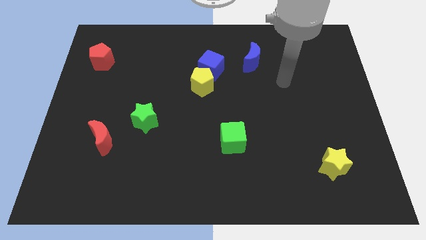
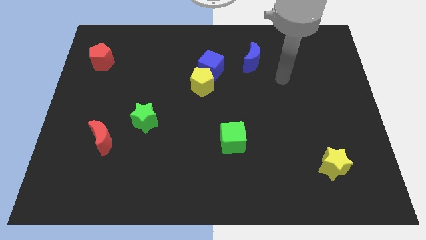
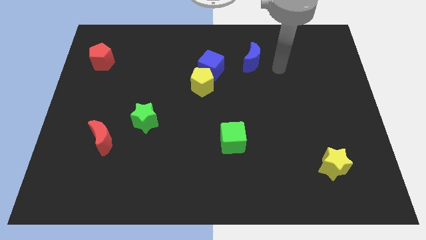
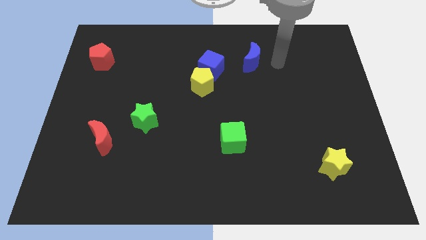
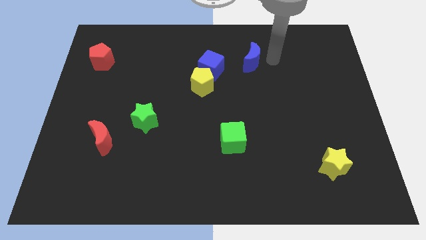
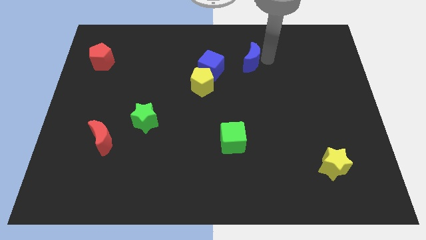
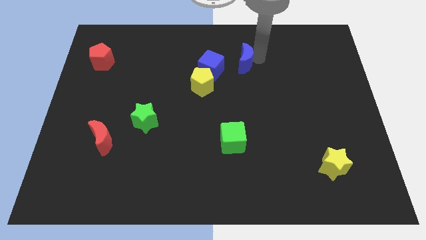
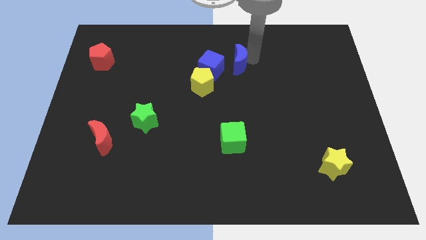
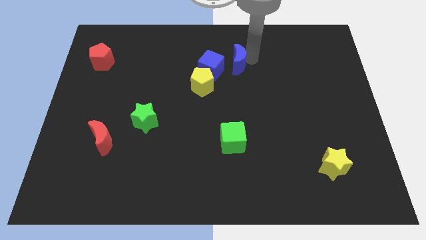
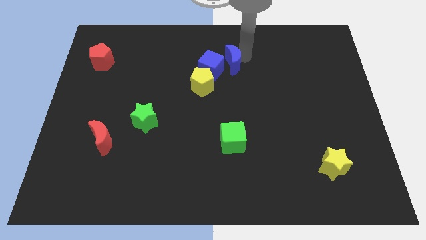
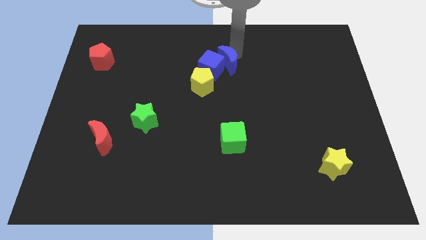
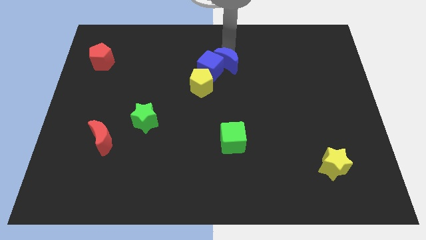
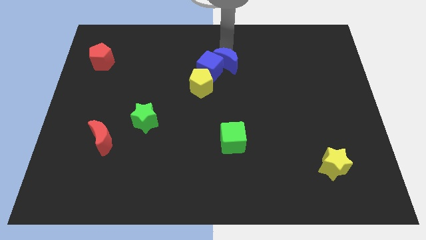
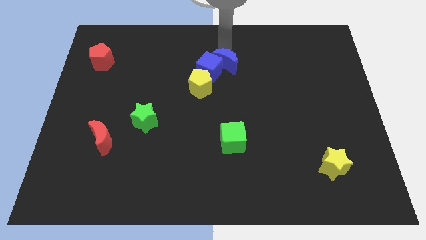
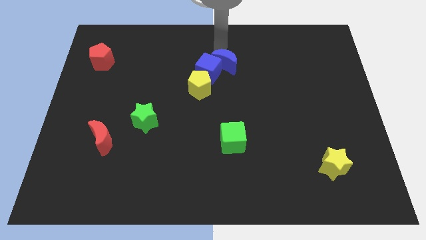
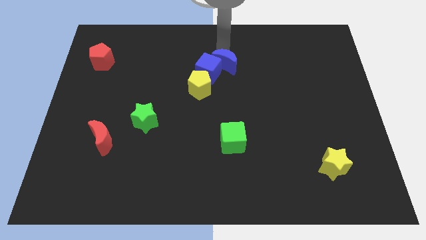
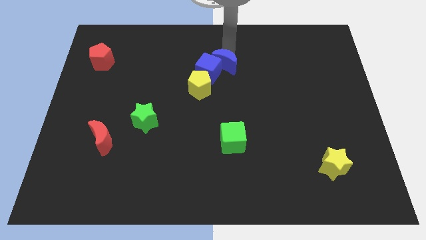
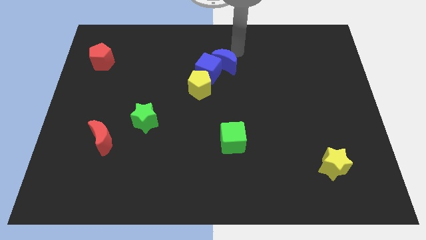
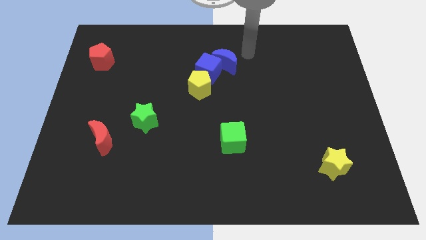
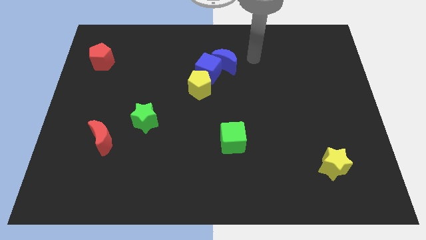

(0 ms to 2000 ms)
push the blue crescent into the blue cube

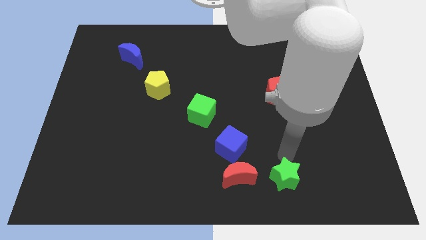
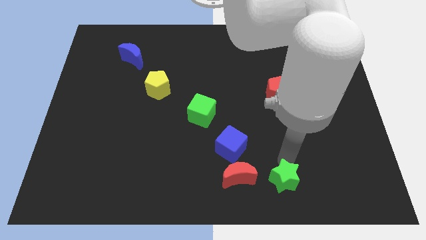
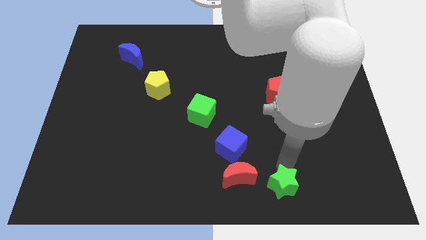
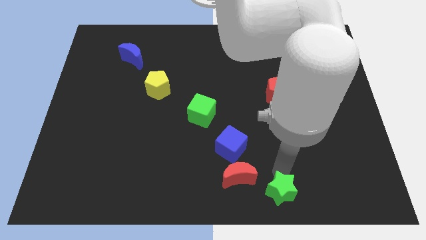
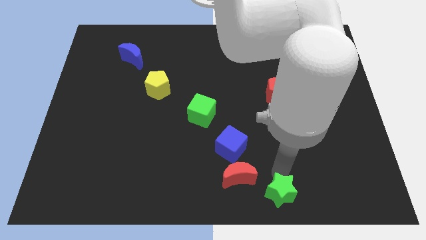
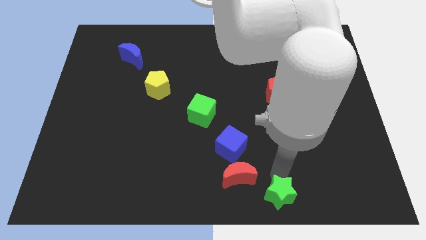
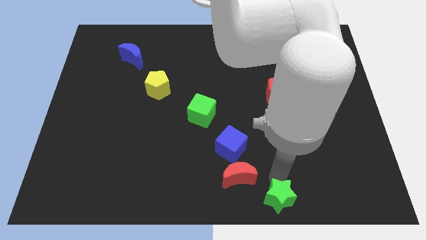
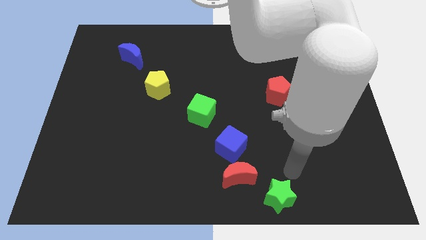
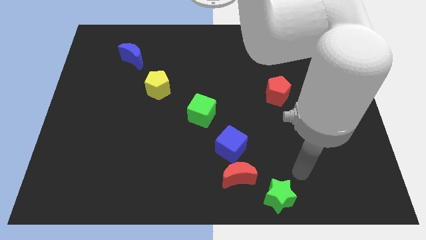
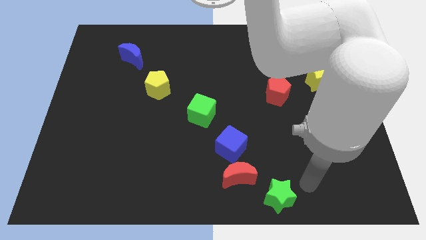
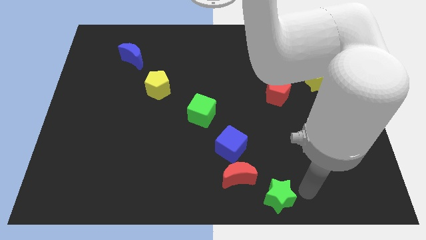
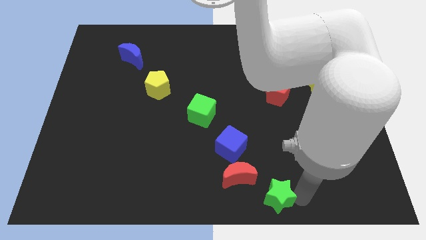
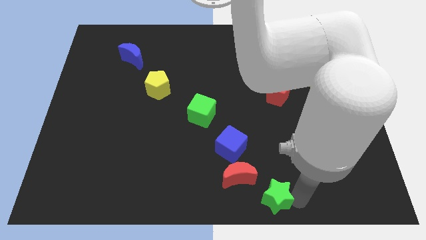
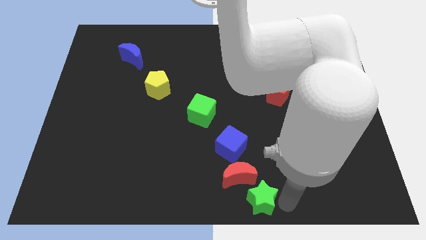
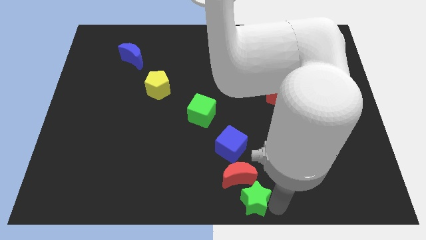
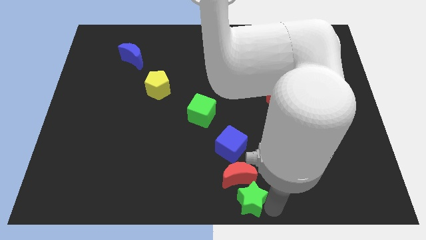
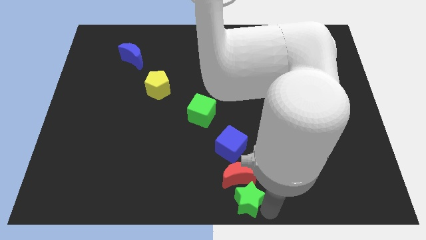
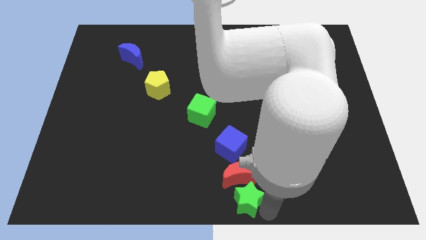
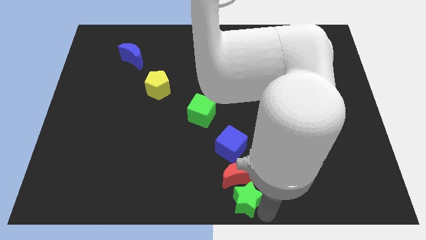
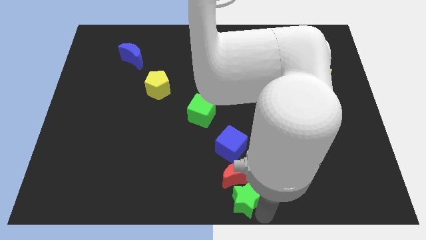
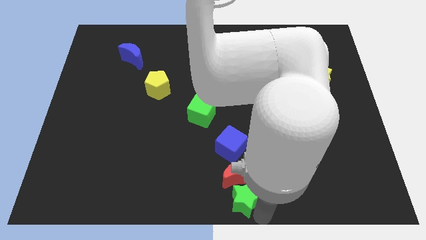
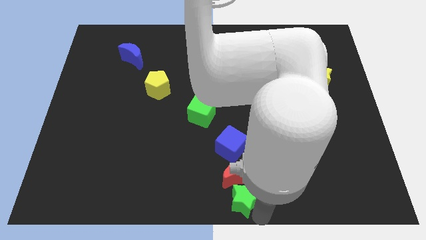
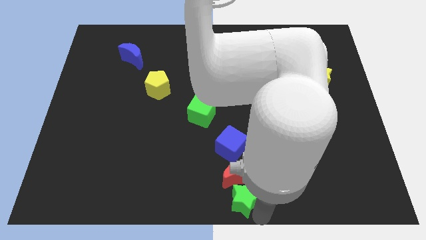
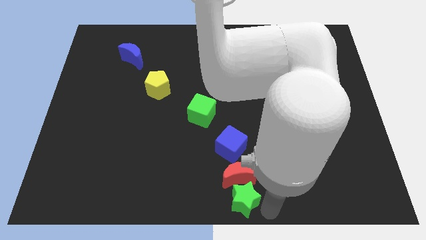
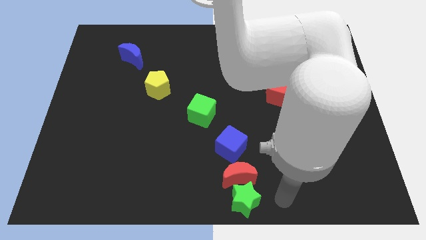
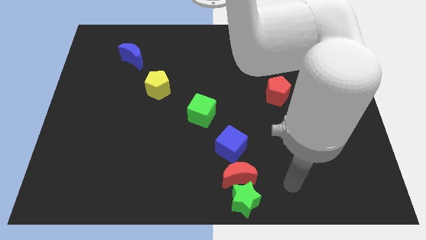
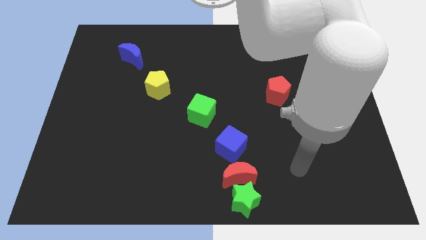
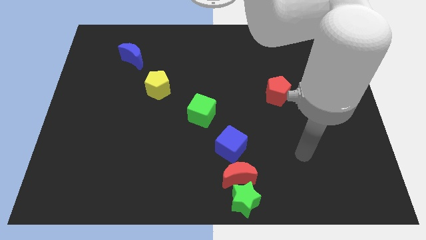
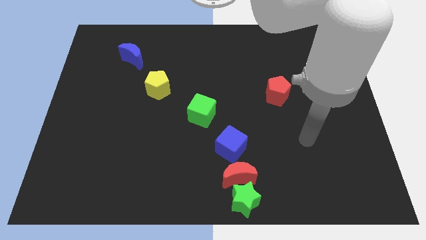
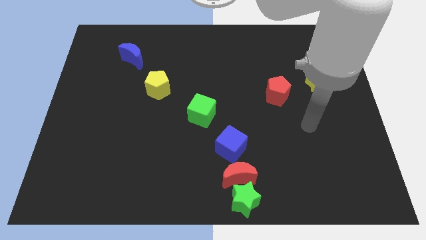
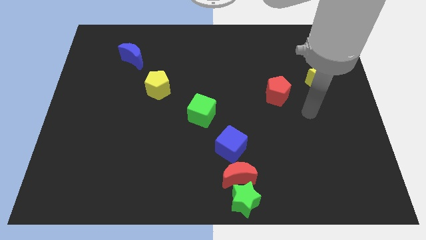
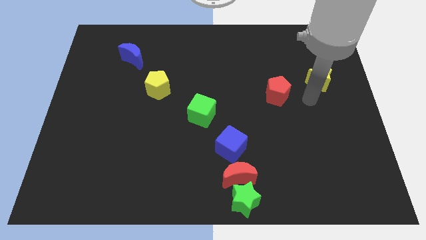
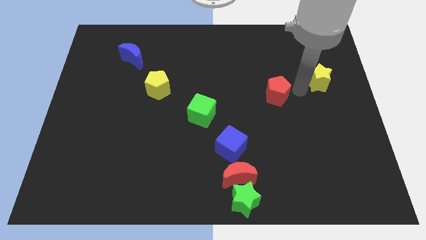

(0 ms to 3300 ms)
place the green star below the red crescent

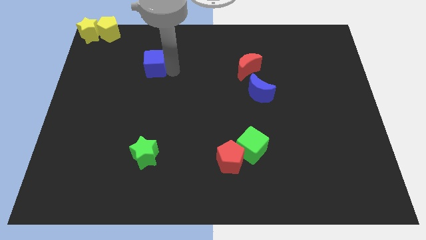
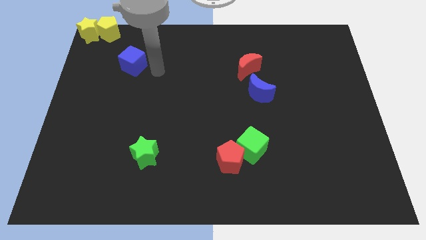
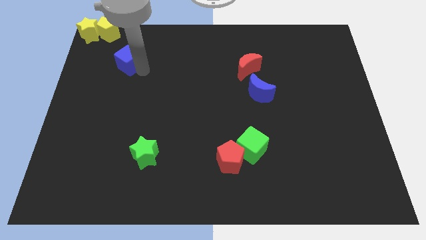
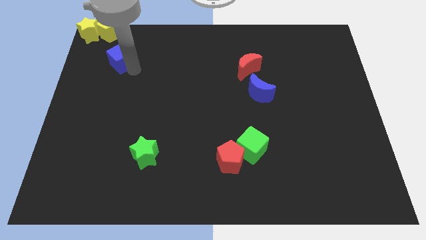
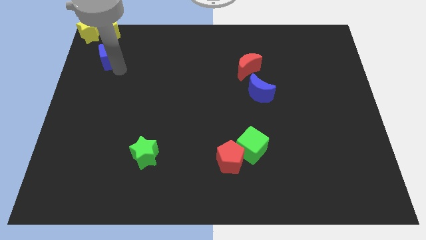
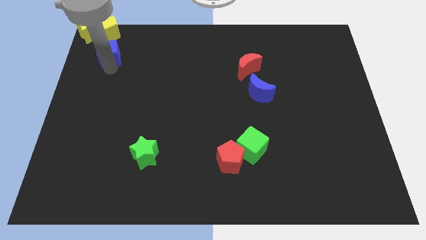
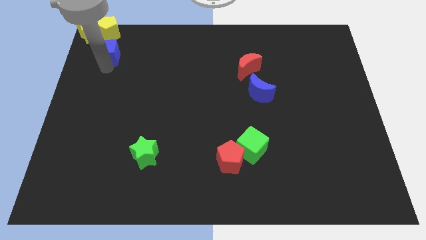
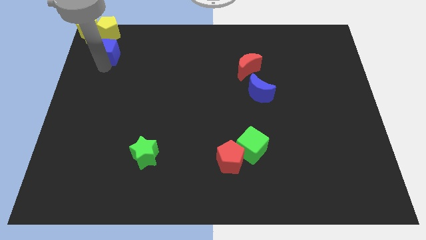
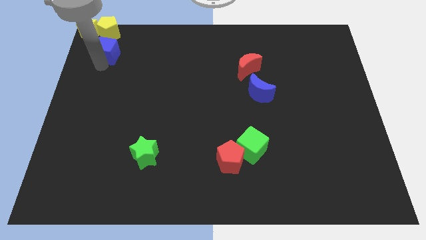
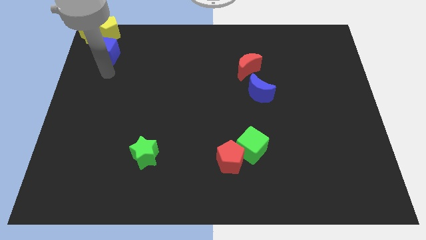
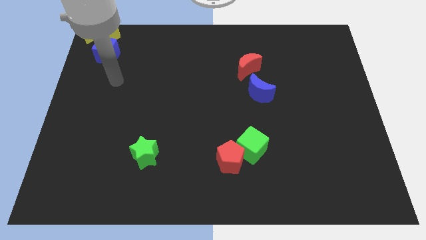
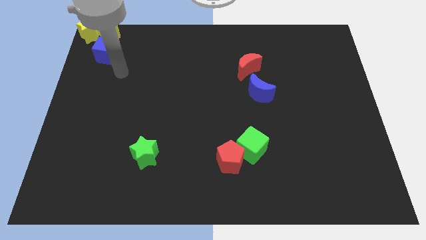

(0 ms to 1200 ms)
place blue cube below the yellow pentagon

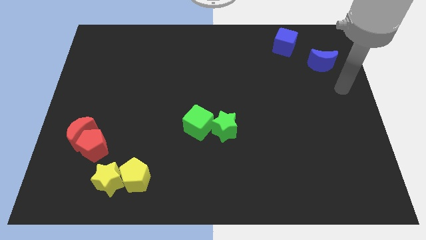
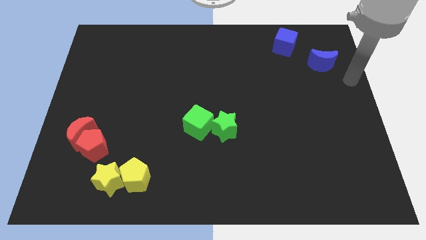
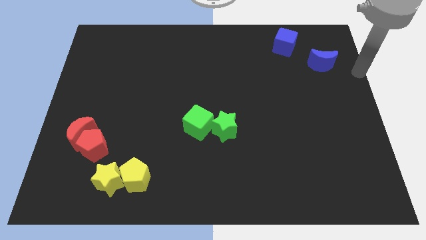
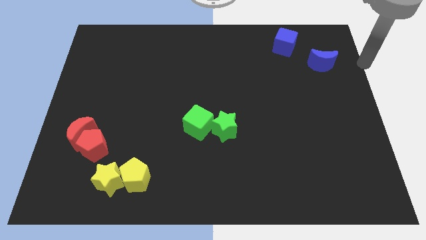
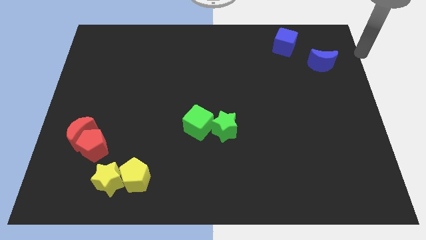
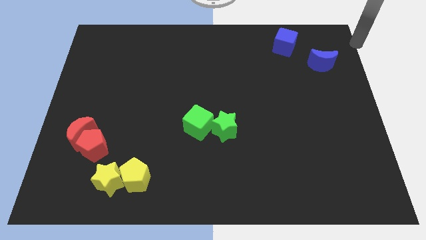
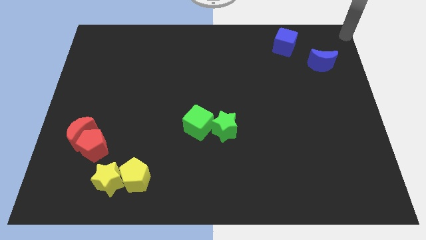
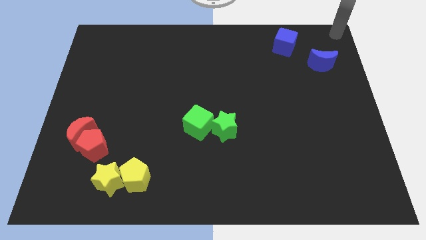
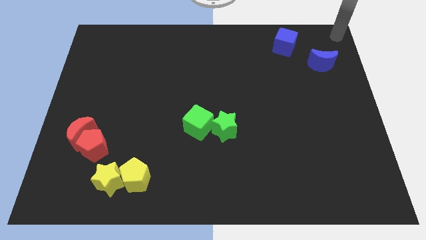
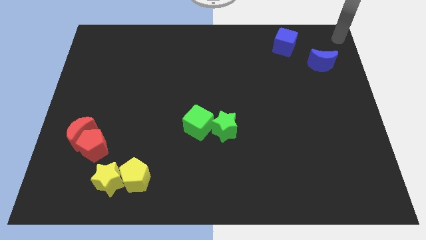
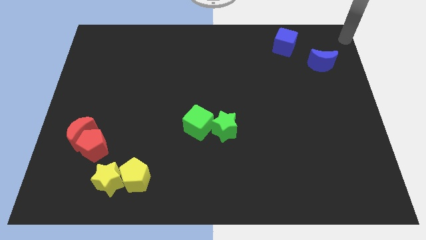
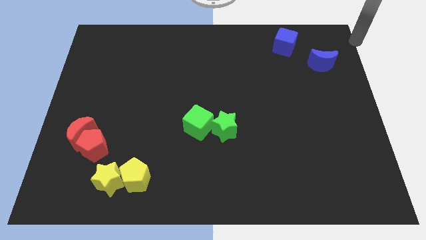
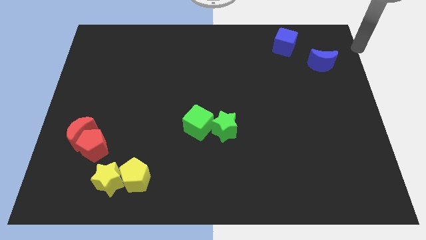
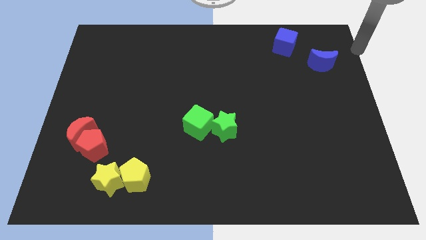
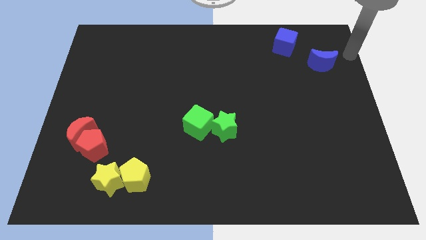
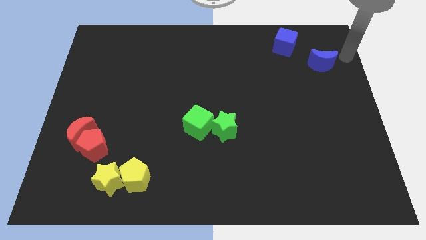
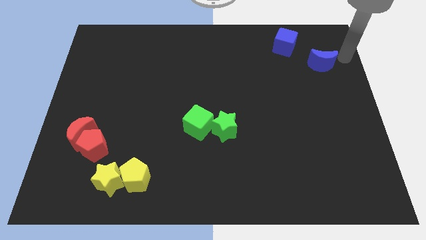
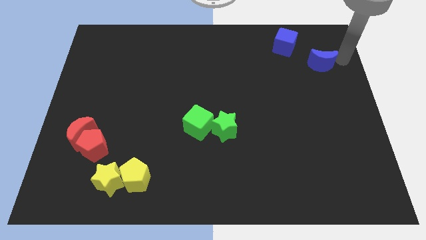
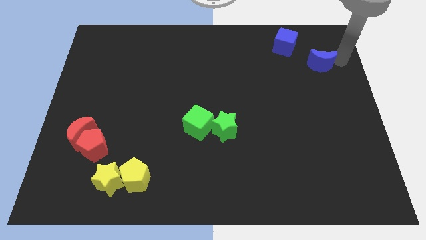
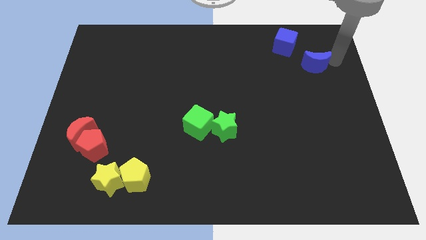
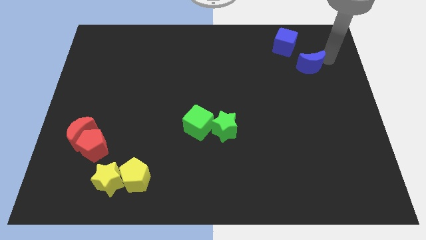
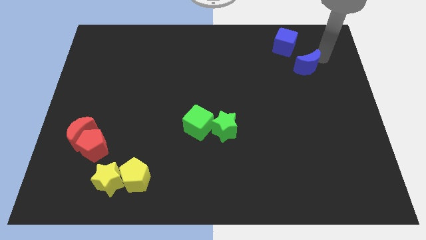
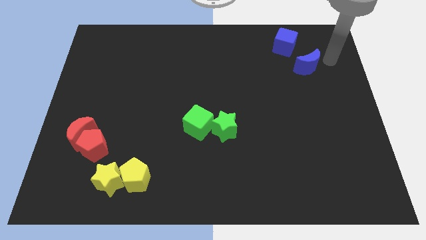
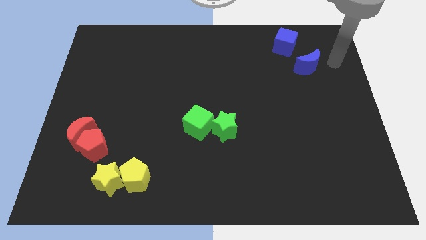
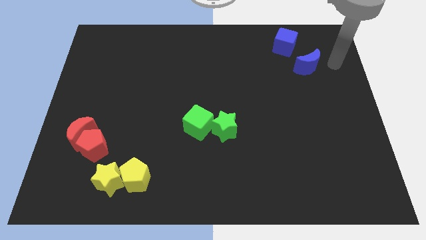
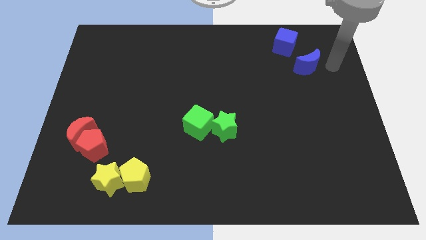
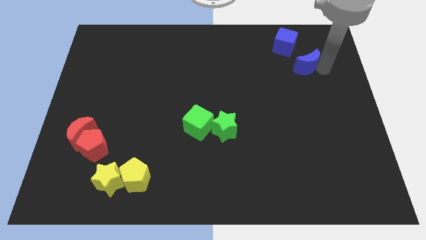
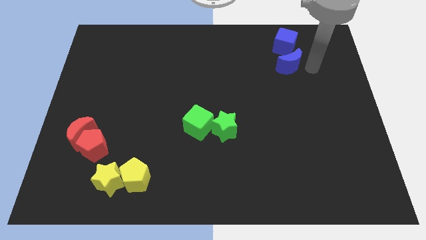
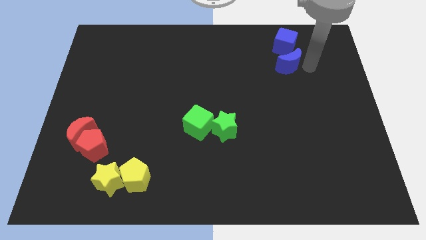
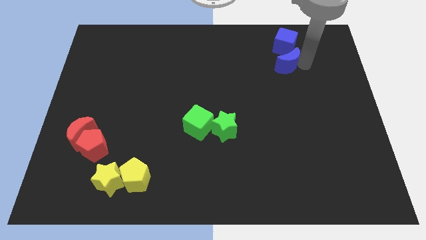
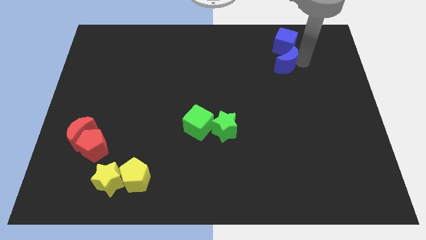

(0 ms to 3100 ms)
push blue crescent below blue cube
